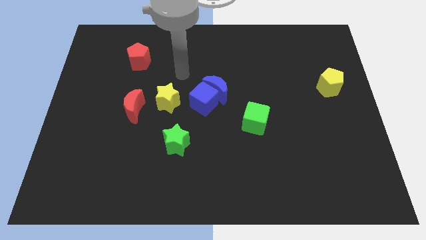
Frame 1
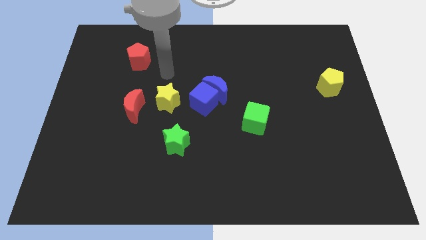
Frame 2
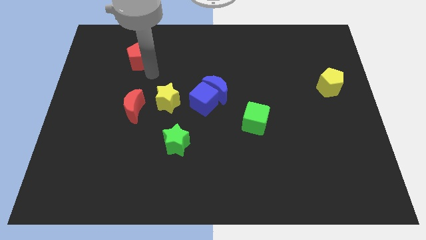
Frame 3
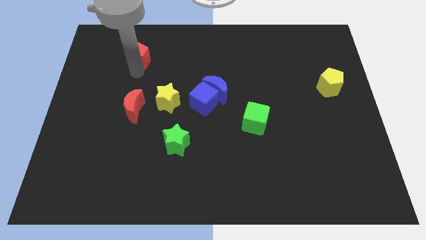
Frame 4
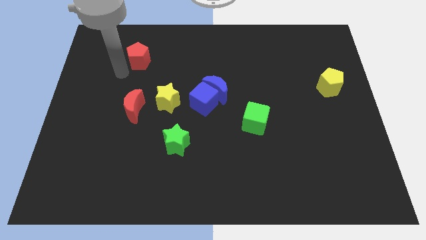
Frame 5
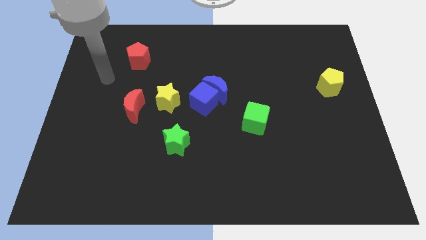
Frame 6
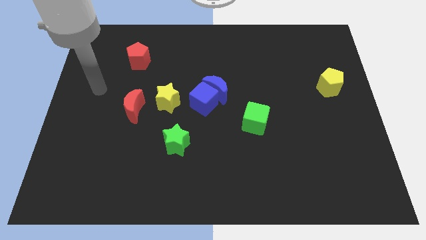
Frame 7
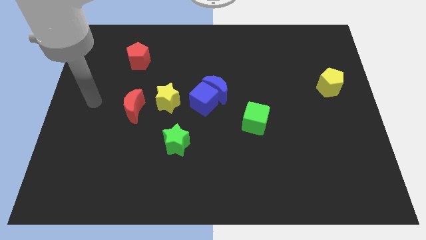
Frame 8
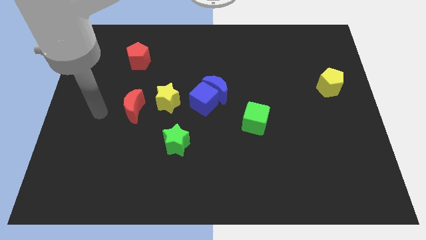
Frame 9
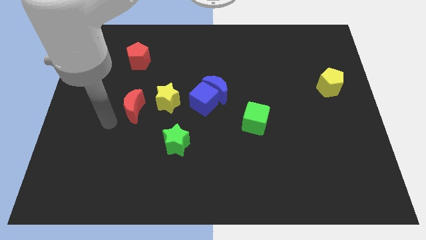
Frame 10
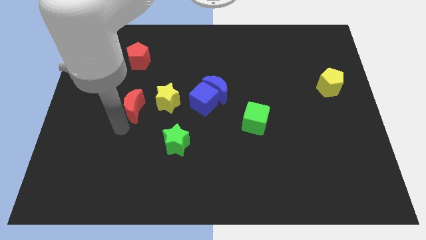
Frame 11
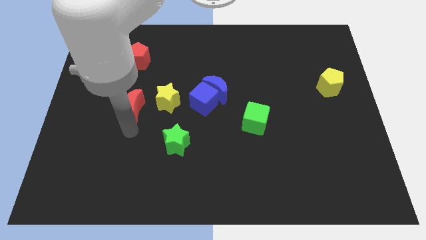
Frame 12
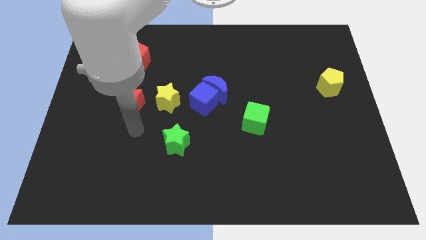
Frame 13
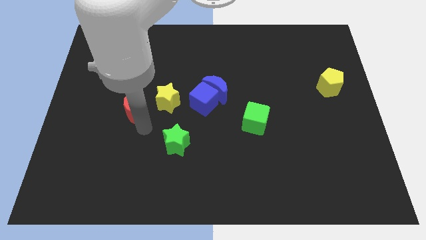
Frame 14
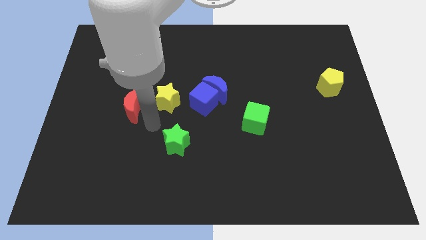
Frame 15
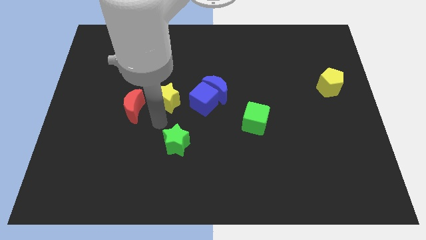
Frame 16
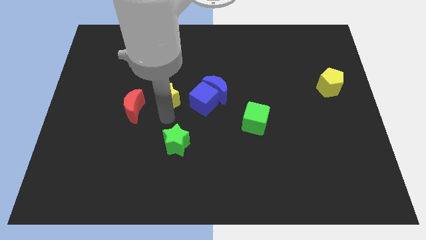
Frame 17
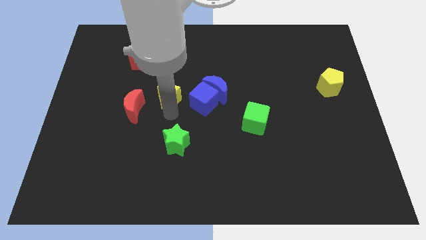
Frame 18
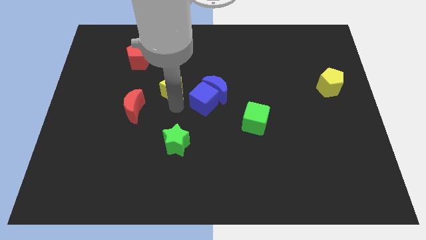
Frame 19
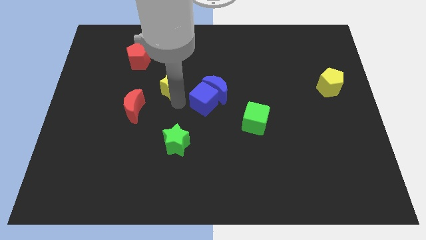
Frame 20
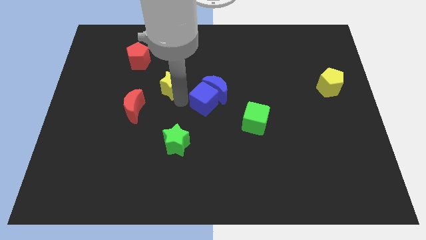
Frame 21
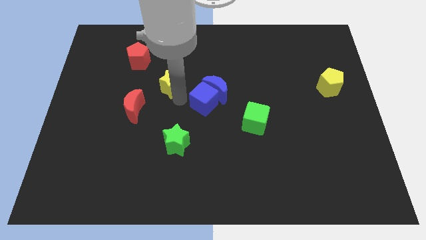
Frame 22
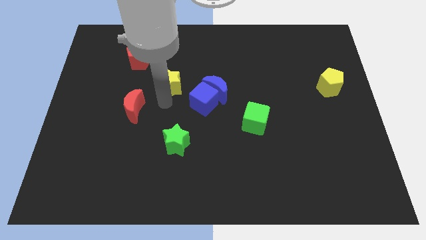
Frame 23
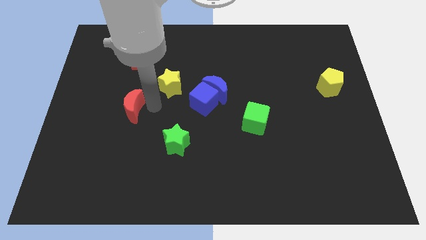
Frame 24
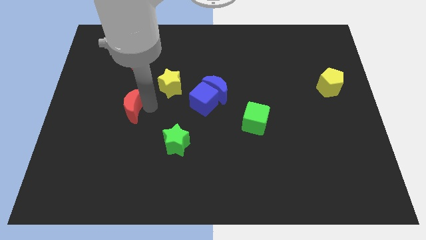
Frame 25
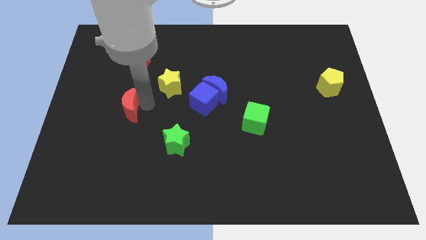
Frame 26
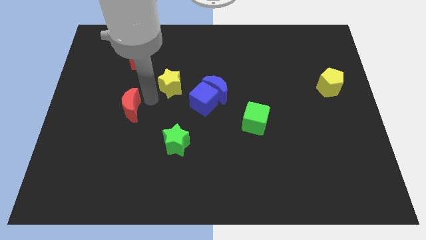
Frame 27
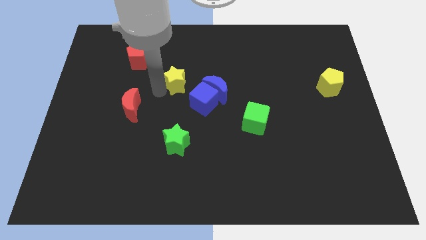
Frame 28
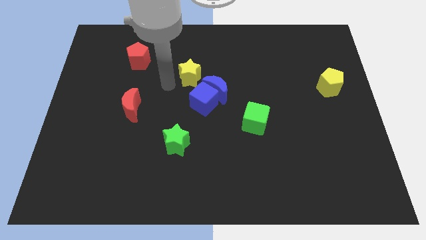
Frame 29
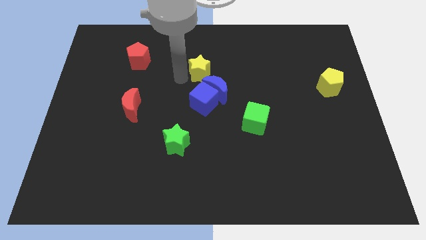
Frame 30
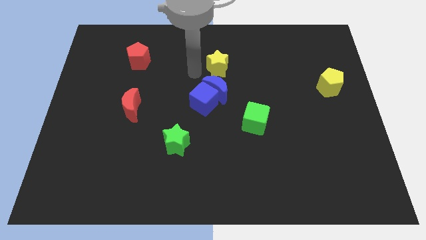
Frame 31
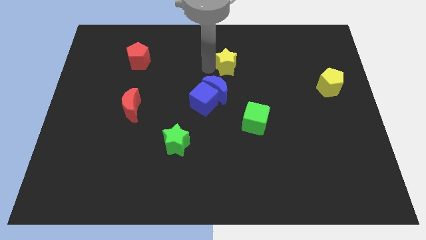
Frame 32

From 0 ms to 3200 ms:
move the yellow star up slightly

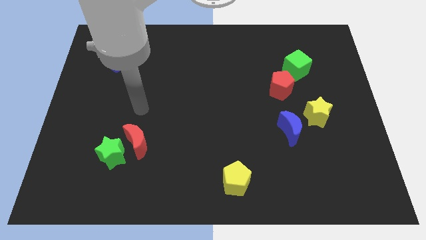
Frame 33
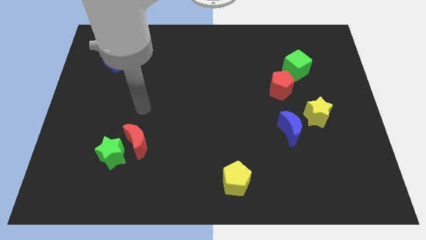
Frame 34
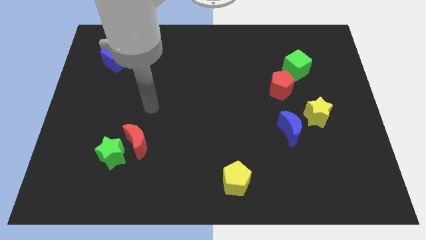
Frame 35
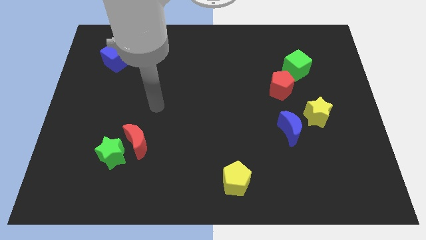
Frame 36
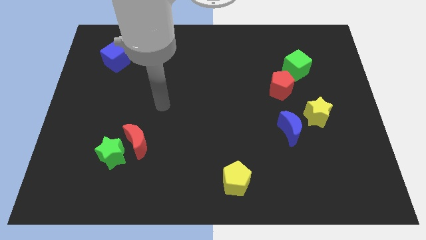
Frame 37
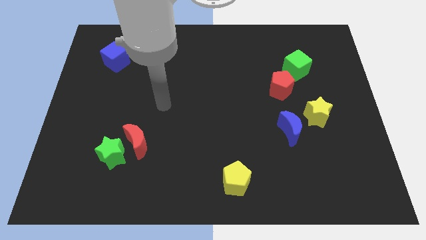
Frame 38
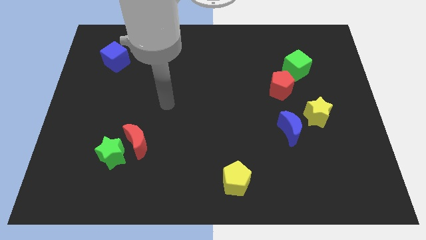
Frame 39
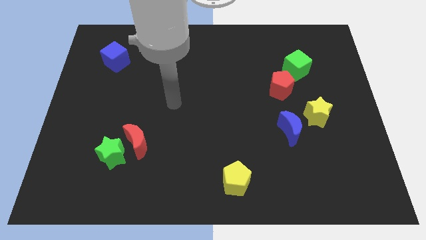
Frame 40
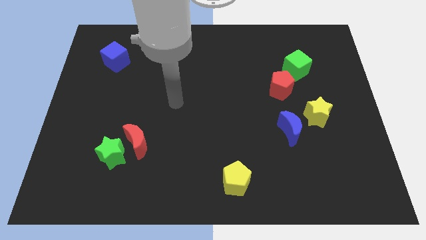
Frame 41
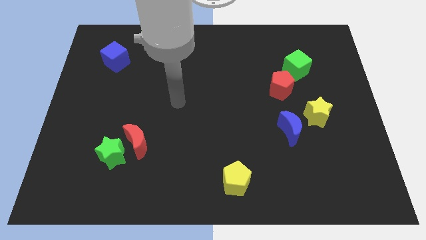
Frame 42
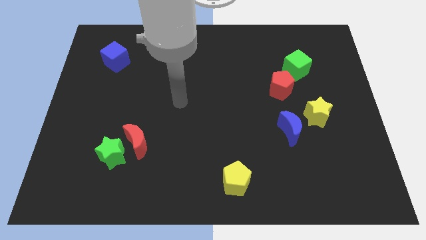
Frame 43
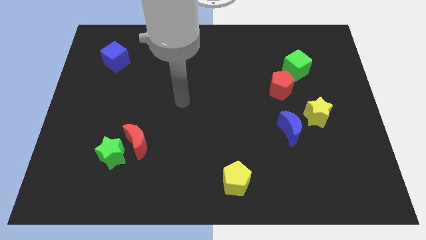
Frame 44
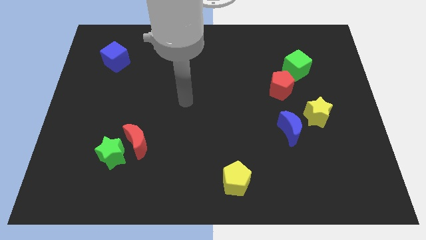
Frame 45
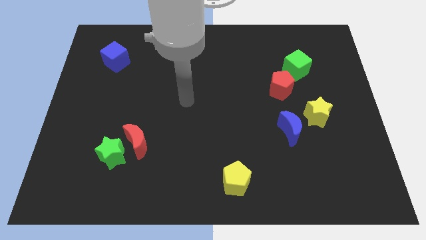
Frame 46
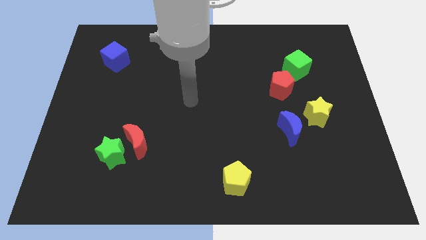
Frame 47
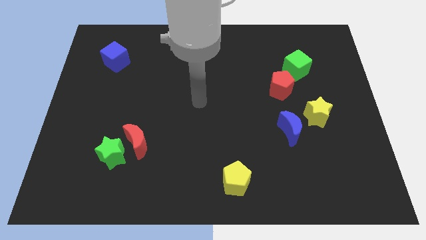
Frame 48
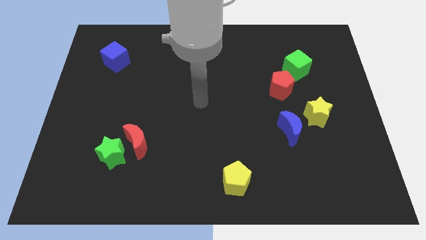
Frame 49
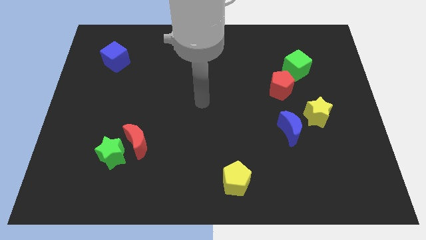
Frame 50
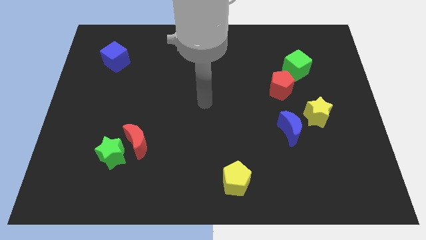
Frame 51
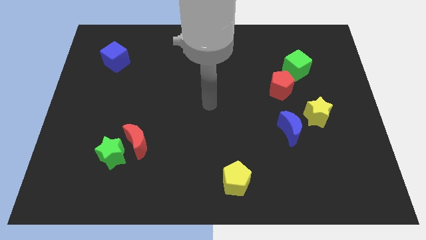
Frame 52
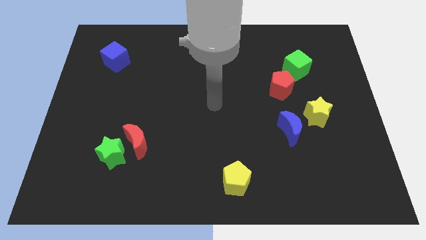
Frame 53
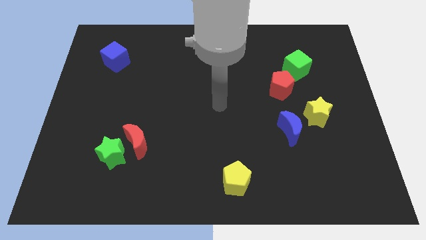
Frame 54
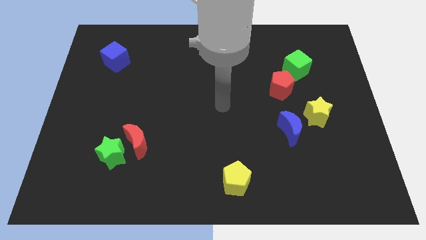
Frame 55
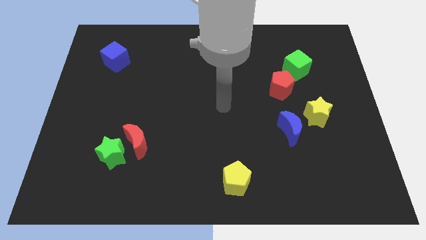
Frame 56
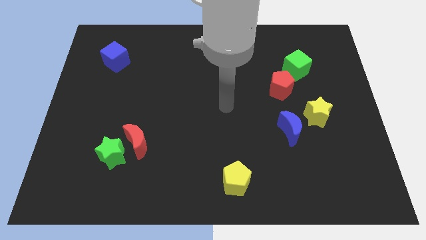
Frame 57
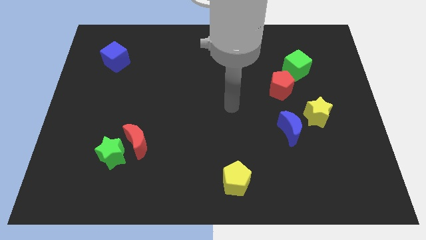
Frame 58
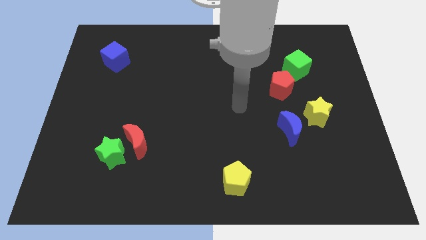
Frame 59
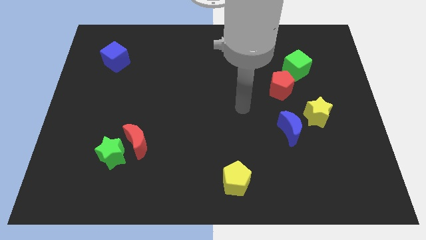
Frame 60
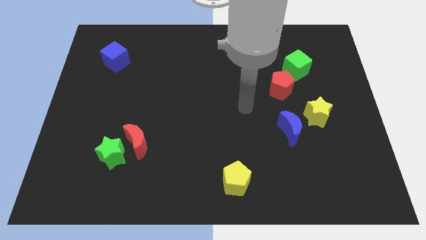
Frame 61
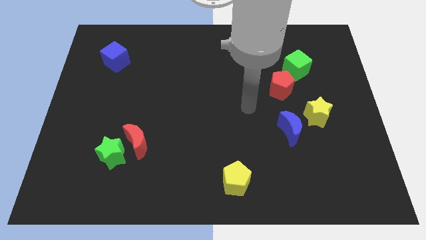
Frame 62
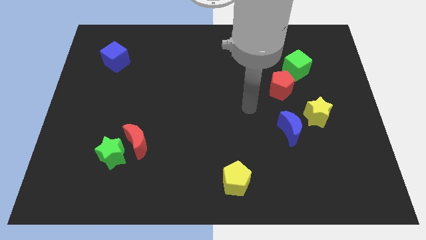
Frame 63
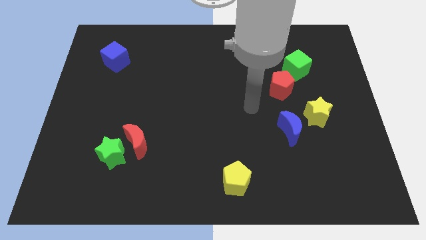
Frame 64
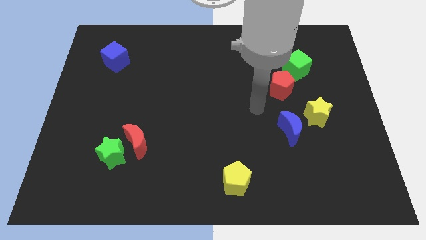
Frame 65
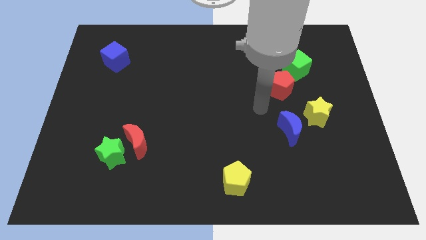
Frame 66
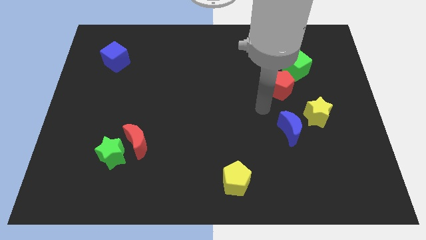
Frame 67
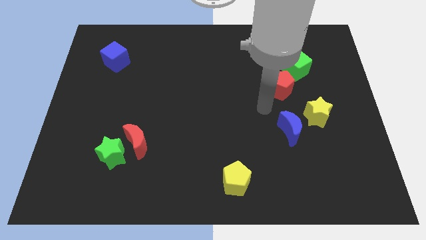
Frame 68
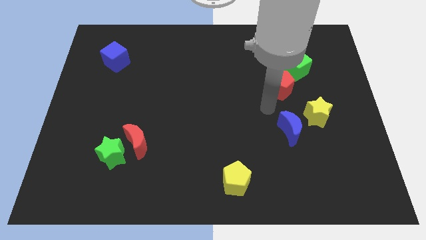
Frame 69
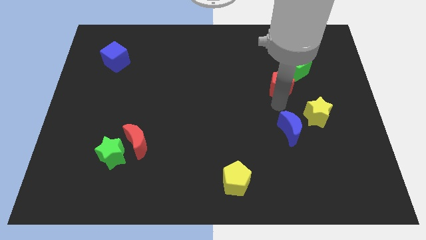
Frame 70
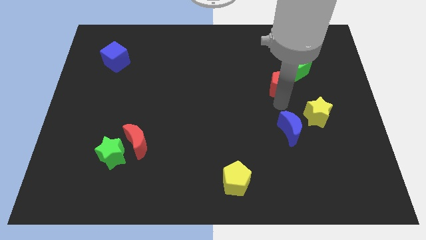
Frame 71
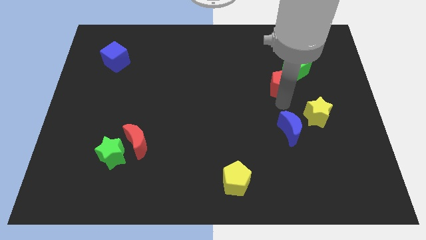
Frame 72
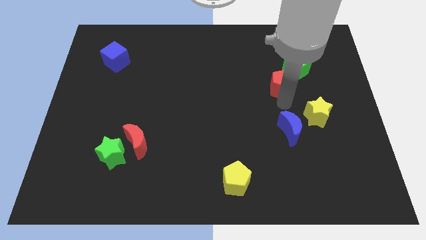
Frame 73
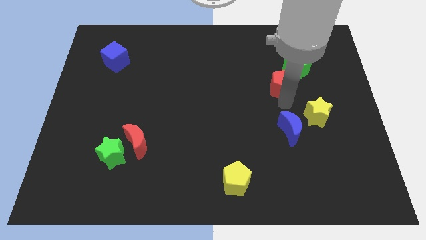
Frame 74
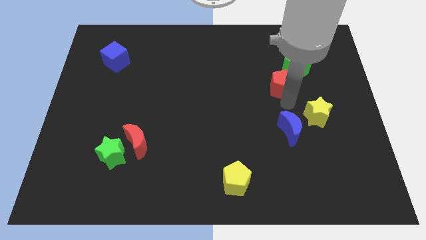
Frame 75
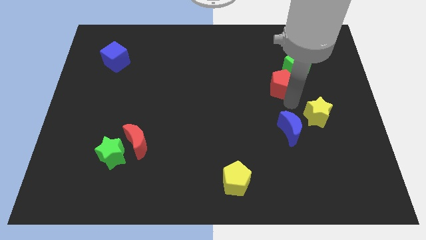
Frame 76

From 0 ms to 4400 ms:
point your arm between red pentagon and blue moon

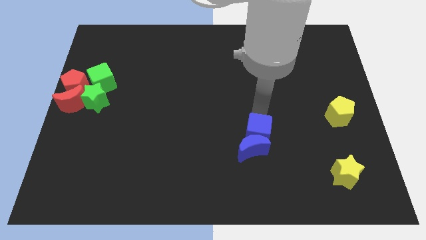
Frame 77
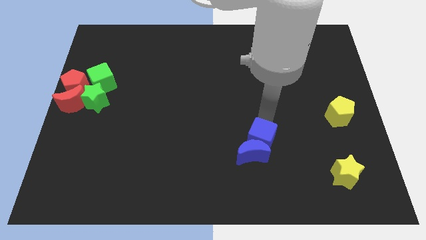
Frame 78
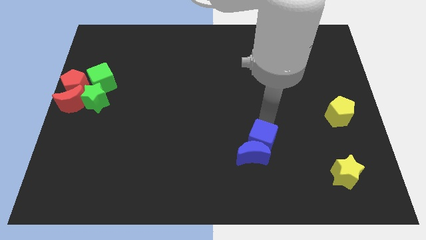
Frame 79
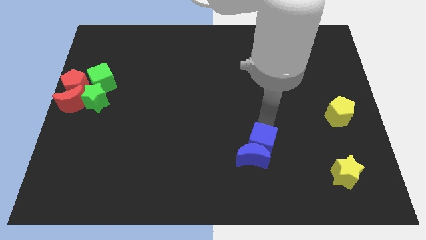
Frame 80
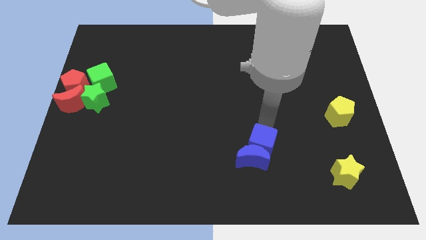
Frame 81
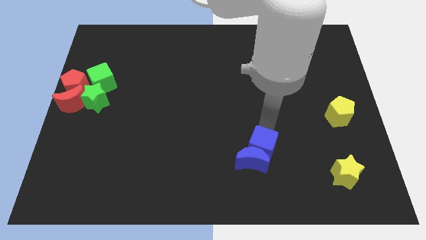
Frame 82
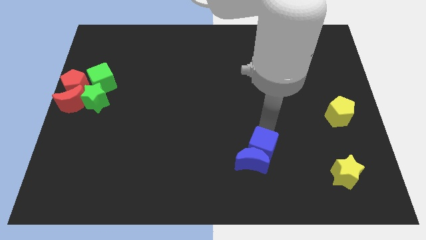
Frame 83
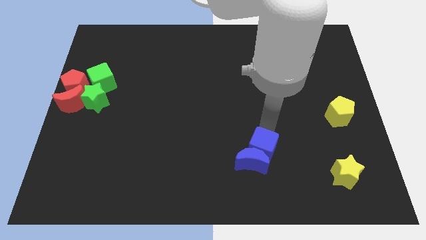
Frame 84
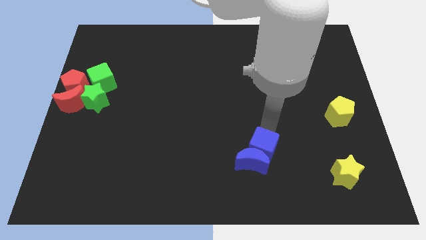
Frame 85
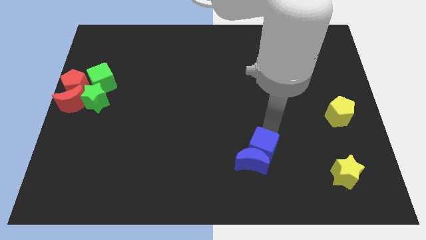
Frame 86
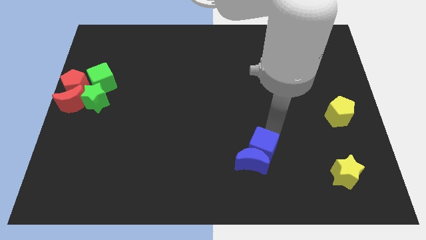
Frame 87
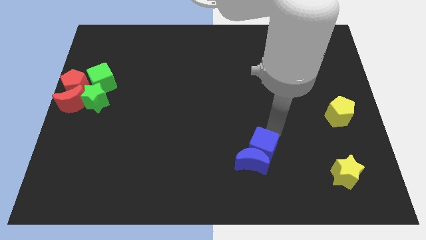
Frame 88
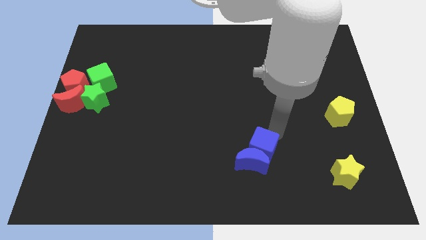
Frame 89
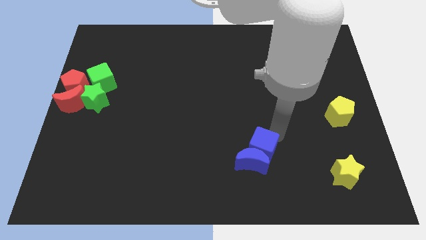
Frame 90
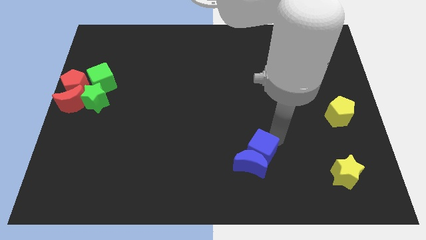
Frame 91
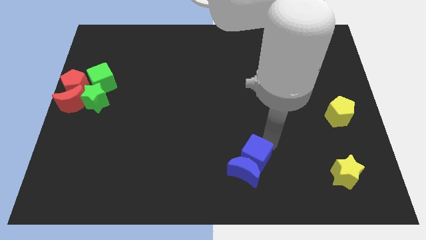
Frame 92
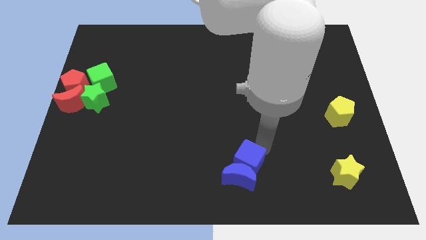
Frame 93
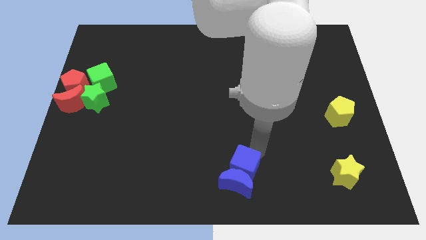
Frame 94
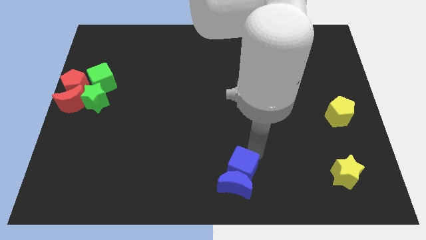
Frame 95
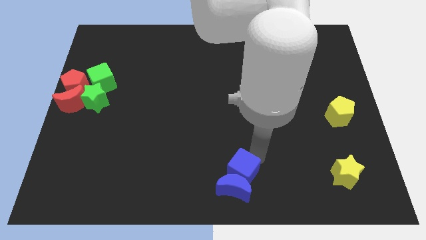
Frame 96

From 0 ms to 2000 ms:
slide the blue blocks to the bottom center
